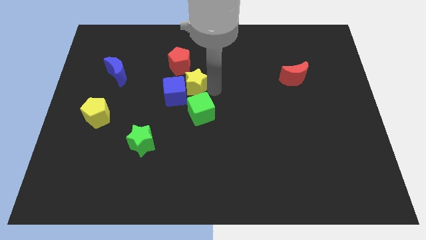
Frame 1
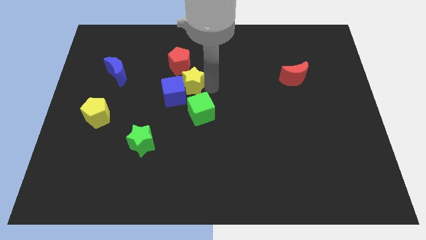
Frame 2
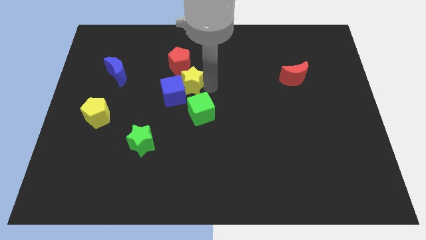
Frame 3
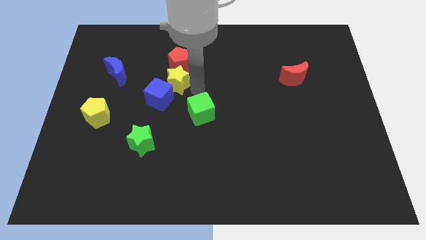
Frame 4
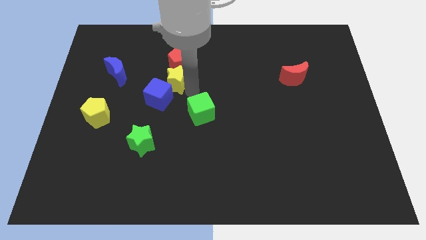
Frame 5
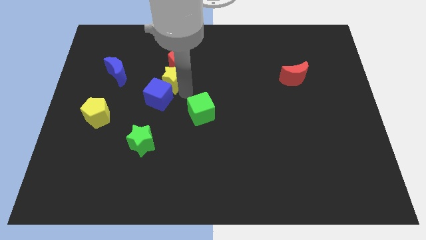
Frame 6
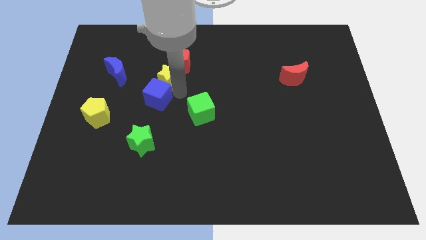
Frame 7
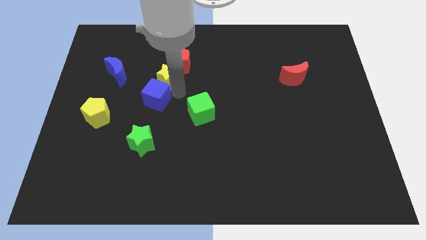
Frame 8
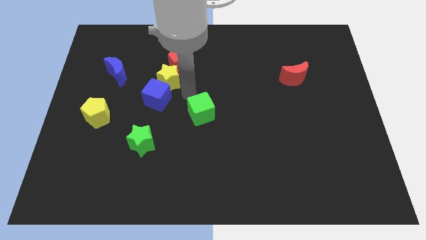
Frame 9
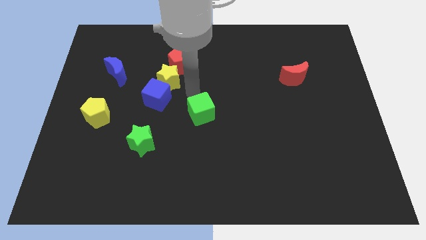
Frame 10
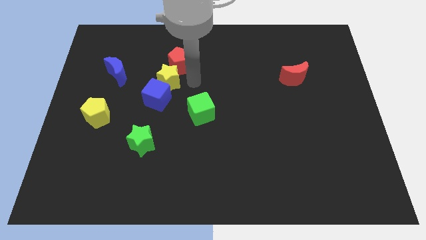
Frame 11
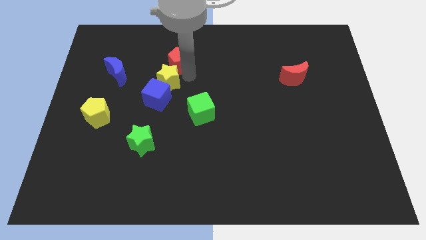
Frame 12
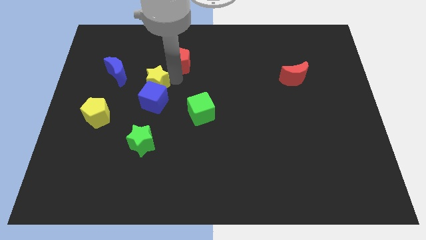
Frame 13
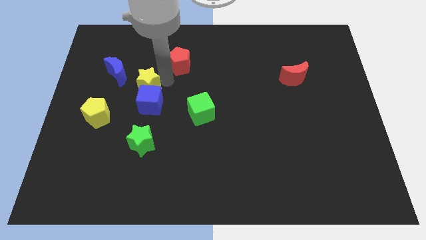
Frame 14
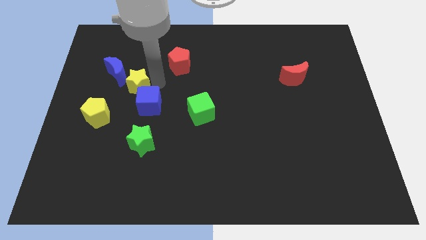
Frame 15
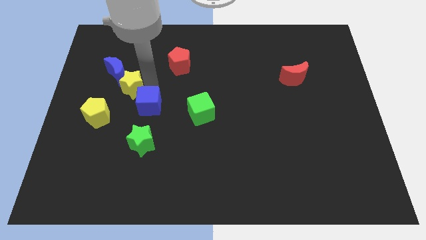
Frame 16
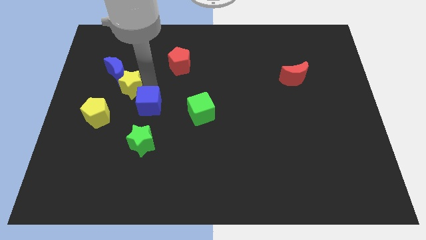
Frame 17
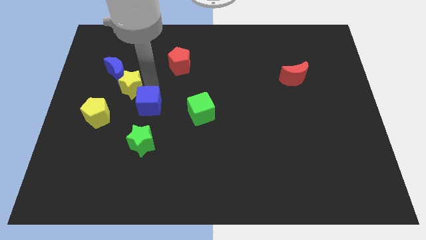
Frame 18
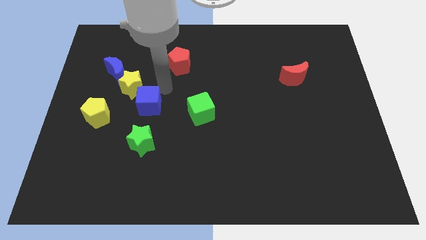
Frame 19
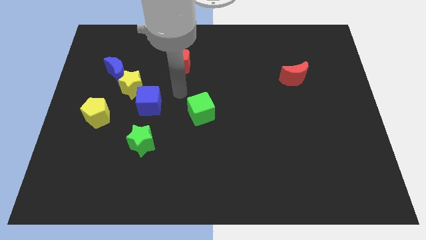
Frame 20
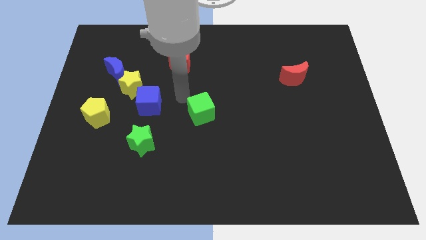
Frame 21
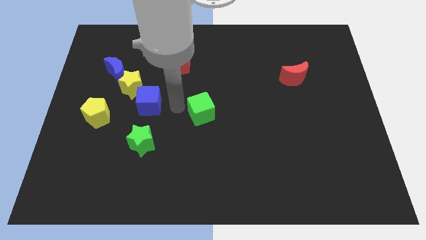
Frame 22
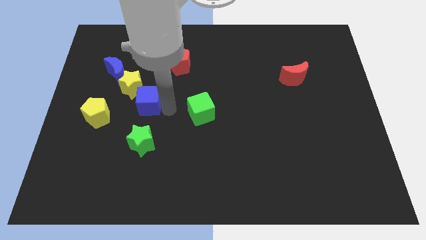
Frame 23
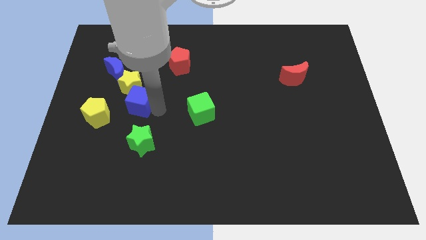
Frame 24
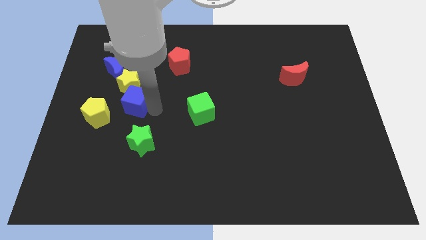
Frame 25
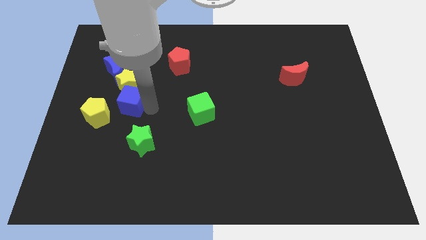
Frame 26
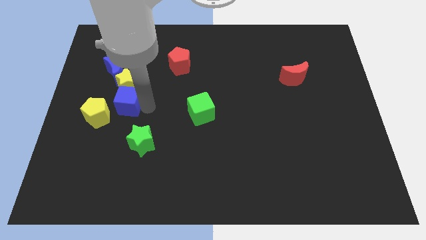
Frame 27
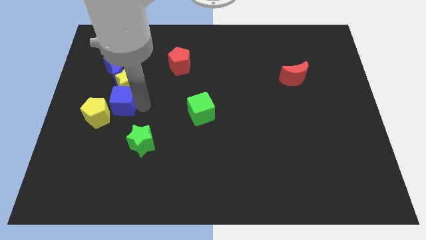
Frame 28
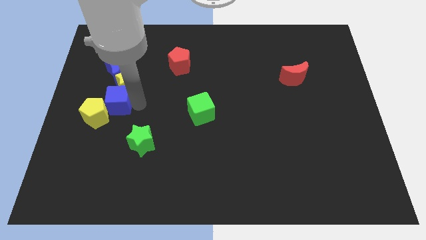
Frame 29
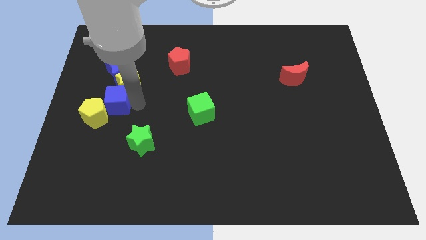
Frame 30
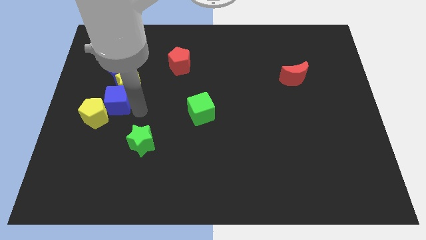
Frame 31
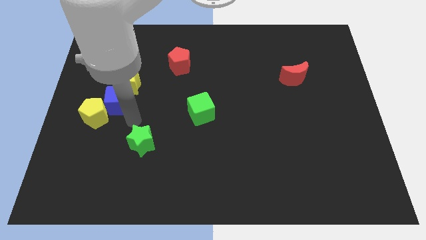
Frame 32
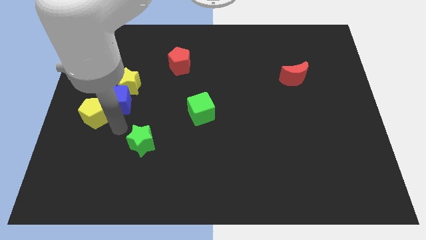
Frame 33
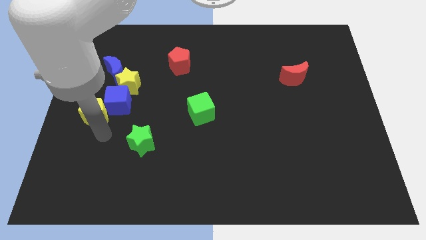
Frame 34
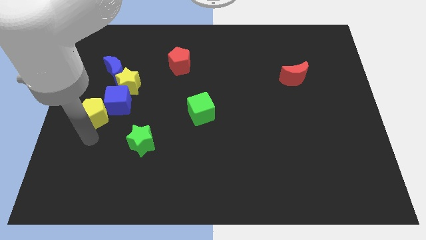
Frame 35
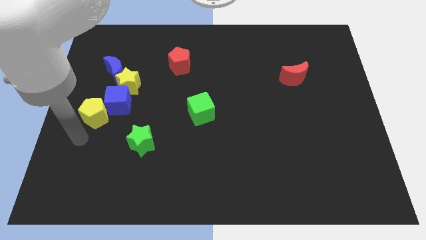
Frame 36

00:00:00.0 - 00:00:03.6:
place the yellow star and the blue cube in between the blue moon and the yellow pentagon

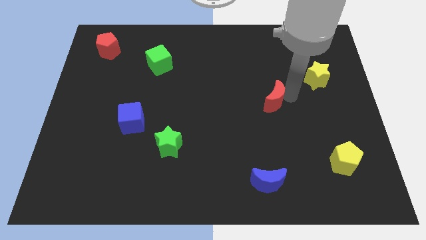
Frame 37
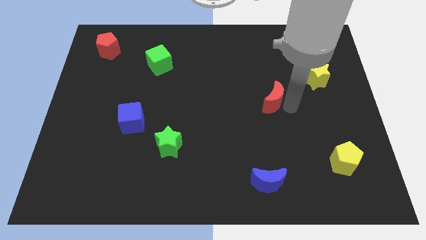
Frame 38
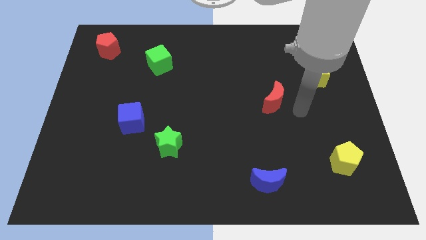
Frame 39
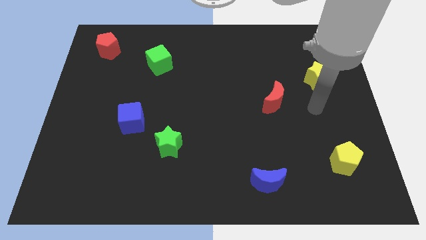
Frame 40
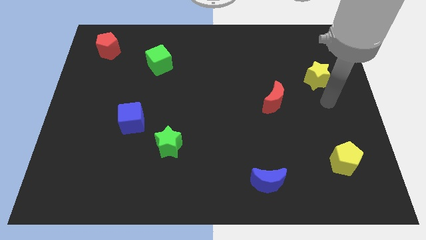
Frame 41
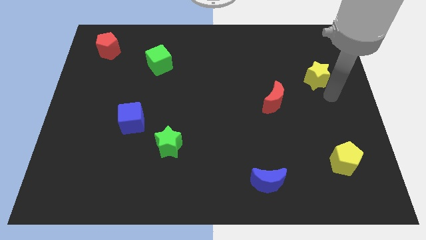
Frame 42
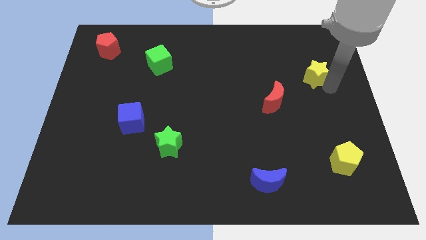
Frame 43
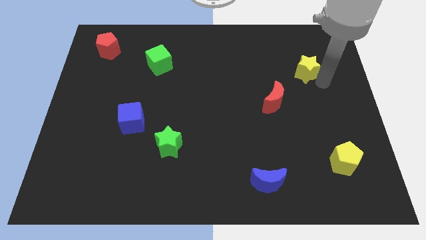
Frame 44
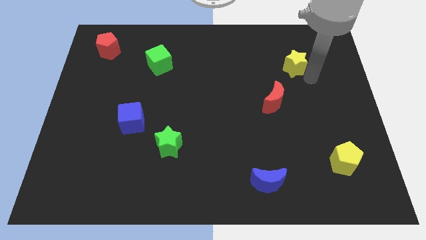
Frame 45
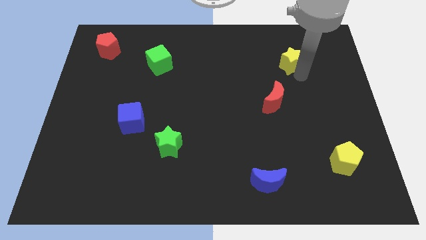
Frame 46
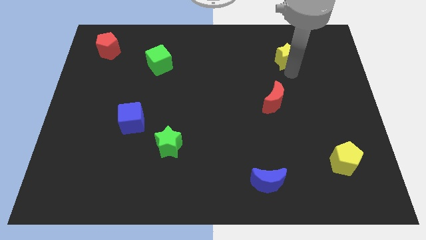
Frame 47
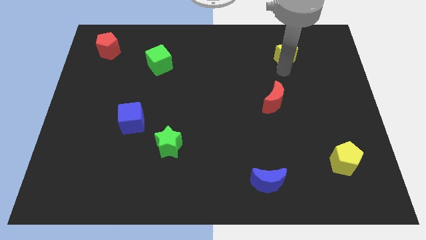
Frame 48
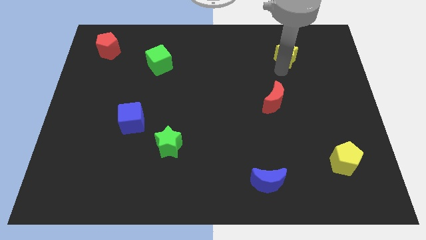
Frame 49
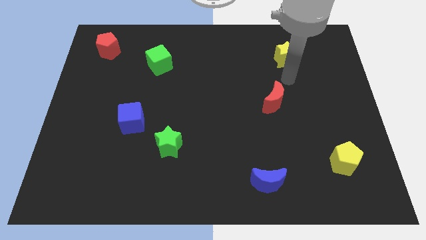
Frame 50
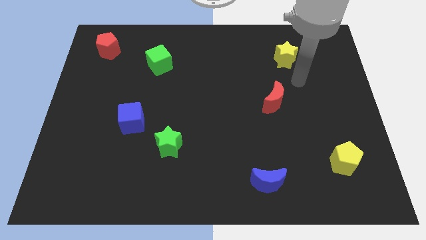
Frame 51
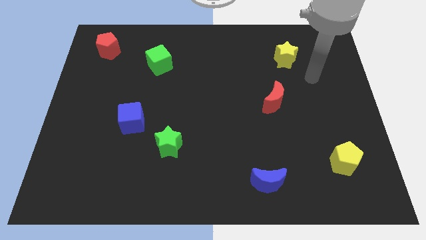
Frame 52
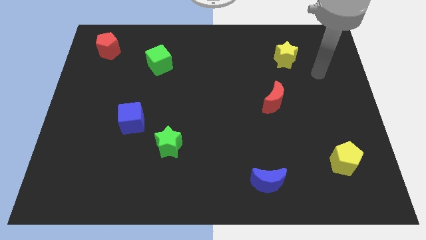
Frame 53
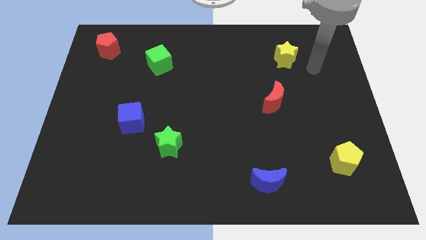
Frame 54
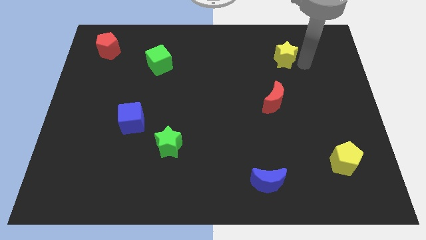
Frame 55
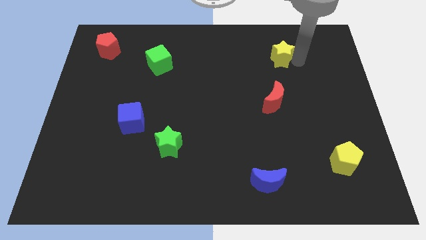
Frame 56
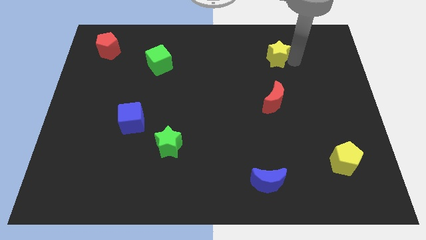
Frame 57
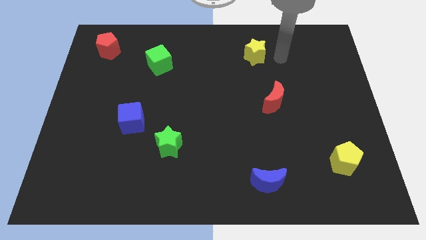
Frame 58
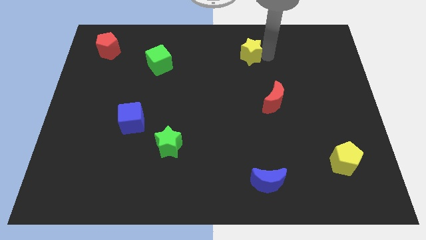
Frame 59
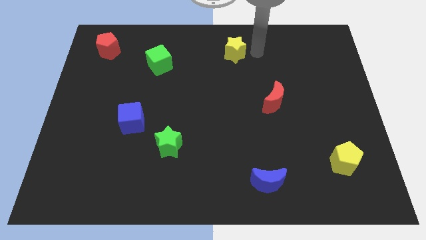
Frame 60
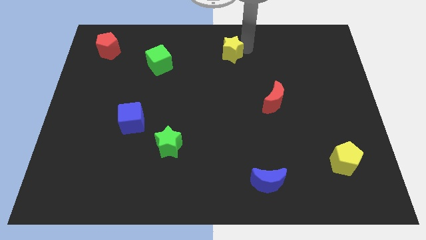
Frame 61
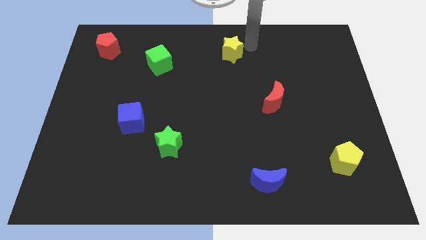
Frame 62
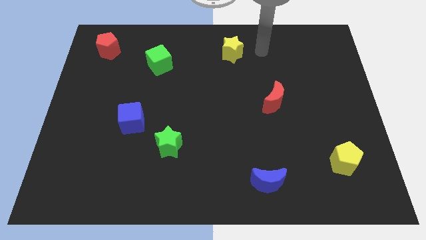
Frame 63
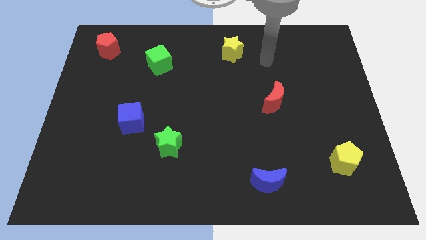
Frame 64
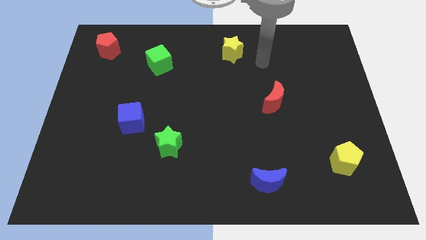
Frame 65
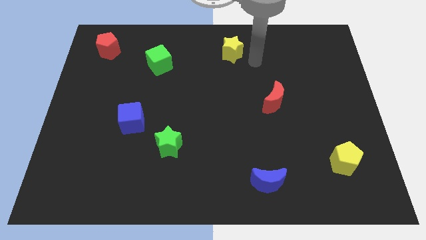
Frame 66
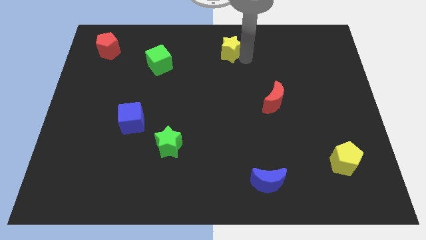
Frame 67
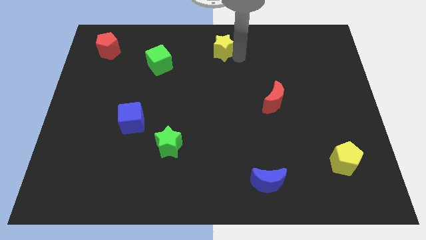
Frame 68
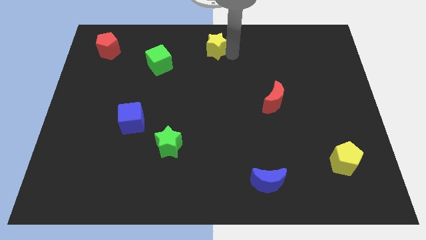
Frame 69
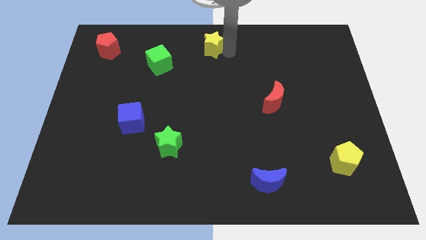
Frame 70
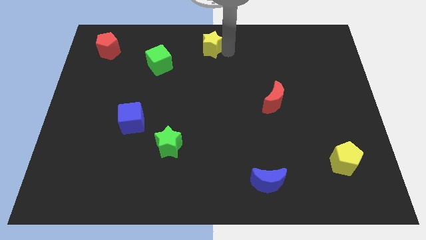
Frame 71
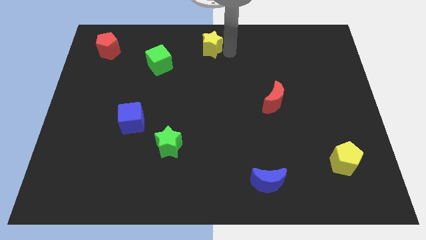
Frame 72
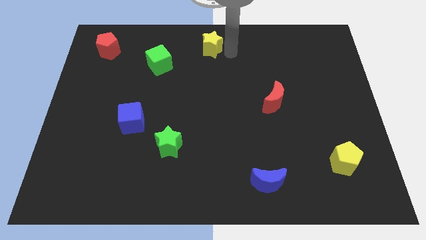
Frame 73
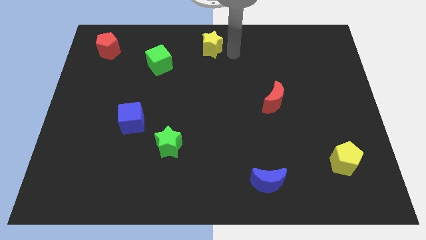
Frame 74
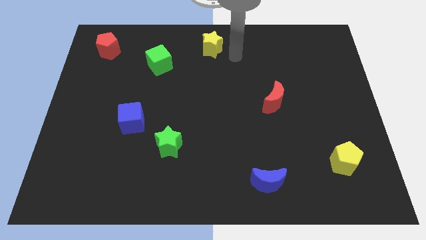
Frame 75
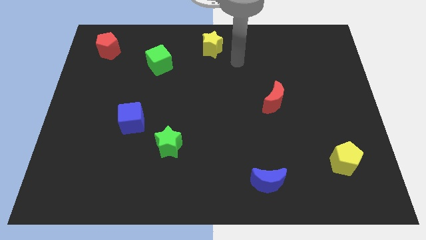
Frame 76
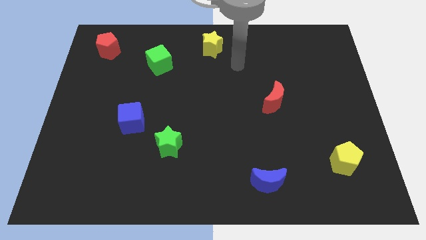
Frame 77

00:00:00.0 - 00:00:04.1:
move yellow star towards top center

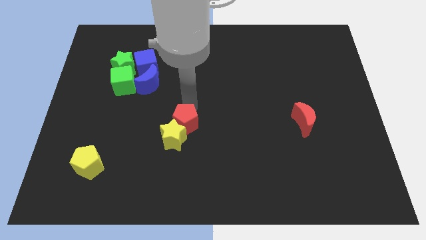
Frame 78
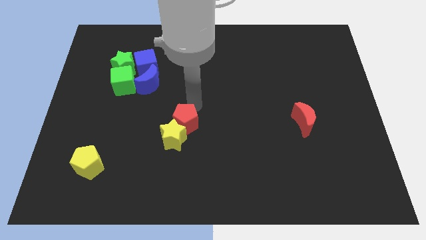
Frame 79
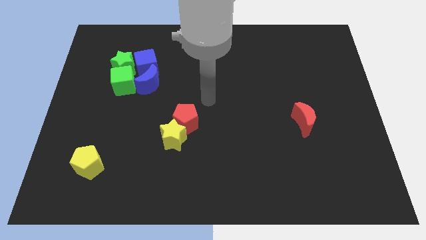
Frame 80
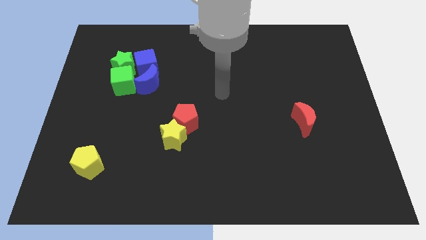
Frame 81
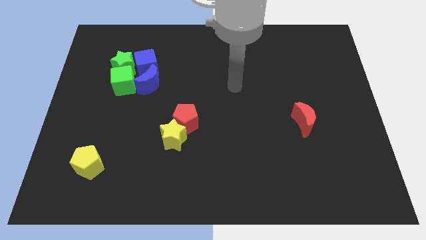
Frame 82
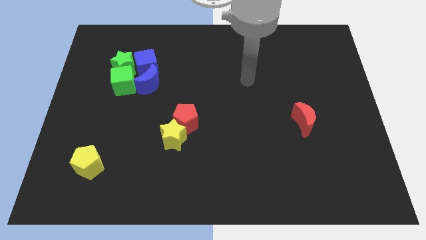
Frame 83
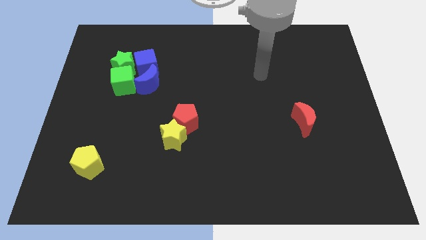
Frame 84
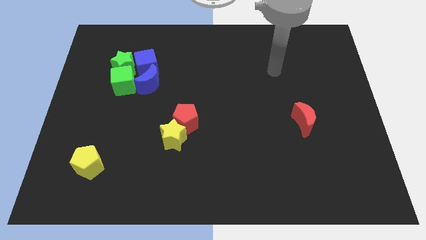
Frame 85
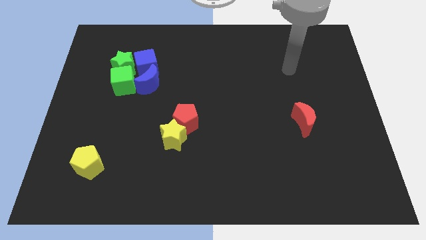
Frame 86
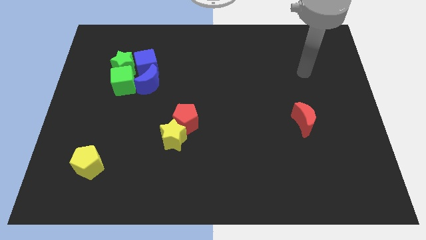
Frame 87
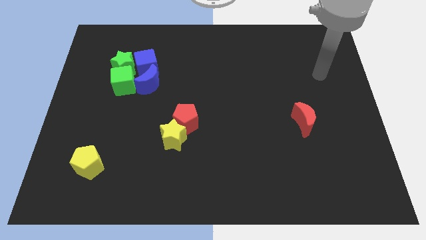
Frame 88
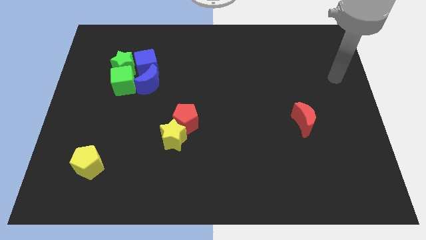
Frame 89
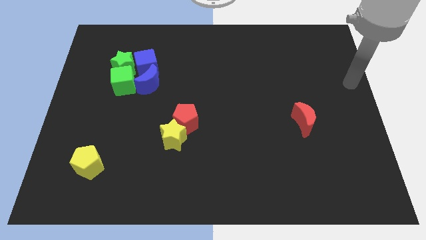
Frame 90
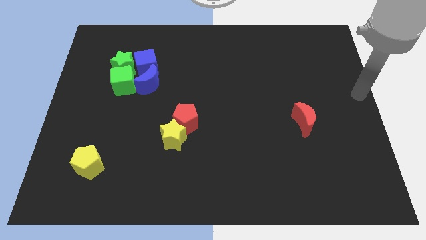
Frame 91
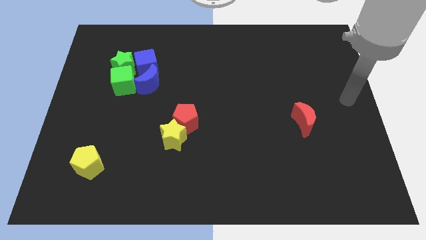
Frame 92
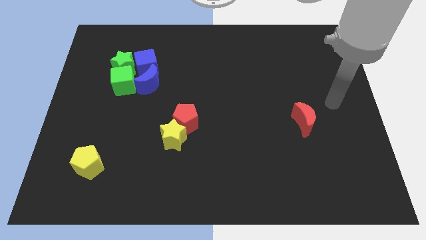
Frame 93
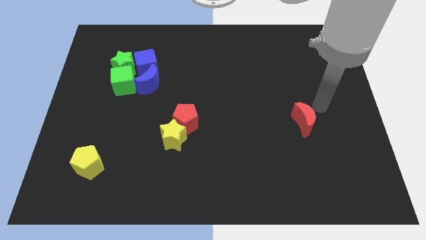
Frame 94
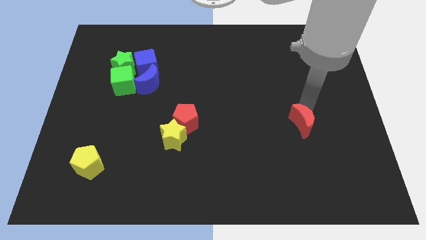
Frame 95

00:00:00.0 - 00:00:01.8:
place the arm diagonally to the red moon
